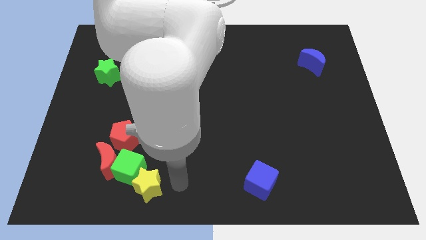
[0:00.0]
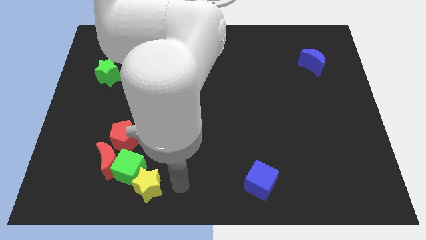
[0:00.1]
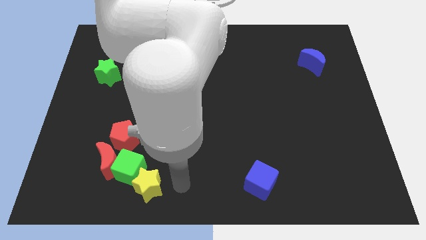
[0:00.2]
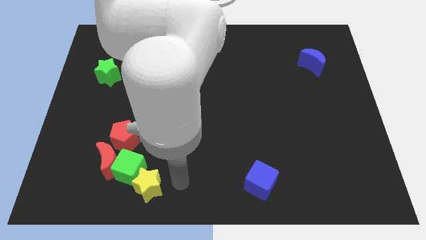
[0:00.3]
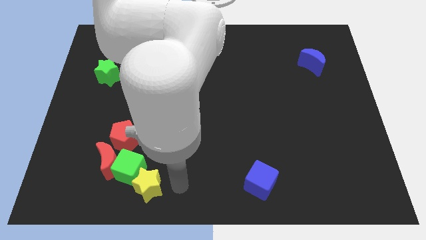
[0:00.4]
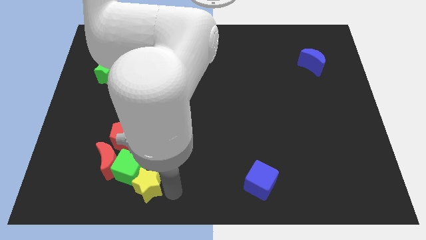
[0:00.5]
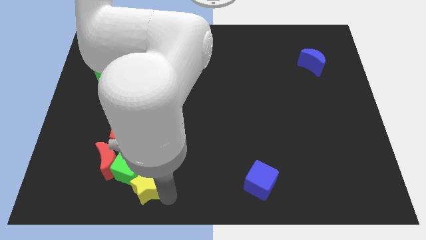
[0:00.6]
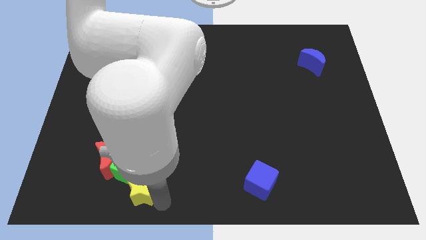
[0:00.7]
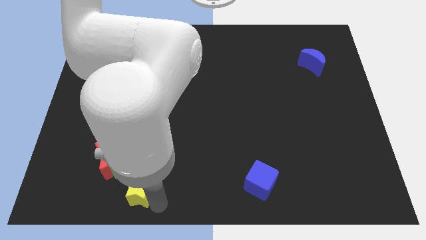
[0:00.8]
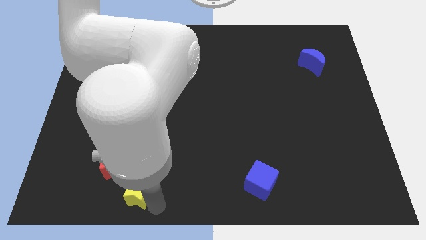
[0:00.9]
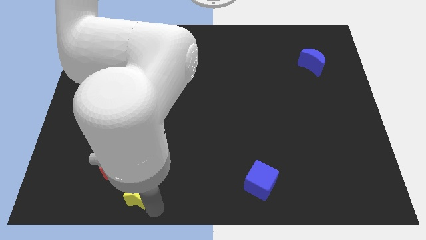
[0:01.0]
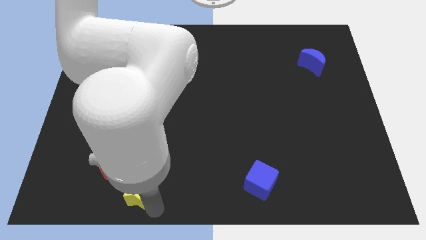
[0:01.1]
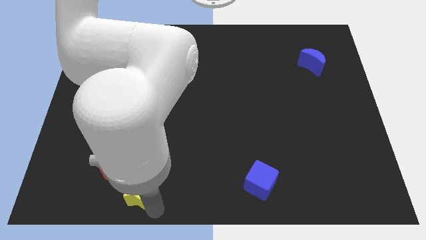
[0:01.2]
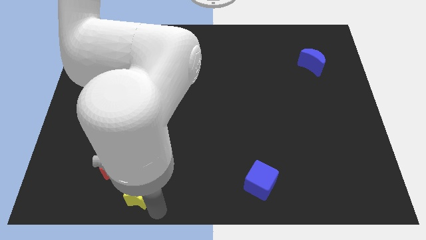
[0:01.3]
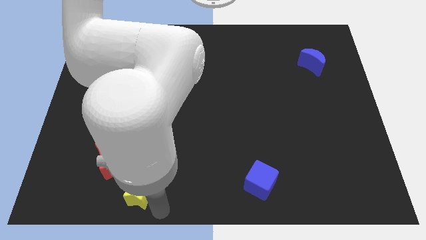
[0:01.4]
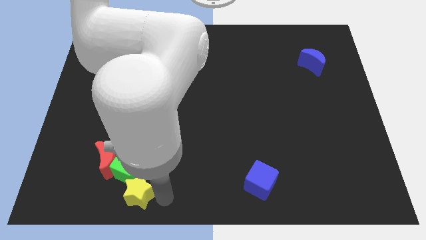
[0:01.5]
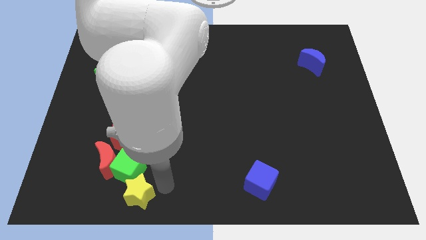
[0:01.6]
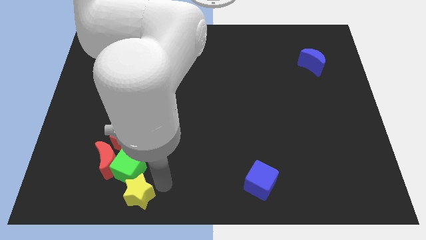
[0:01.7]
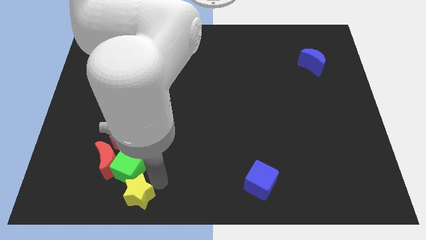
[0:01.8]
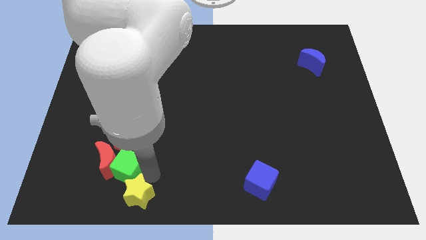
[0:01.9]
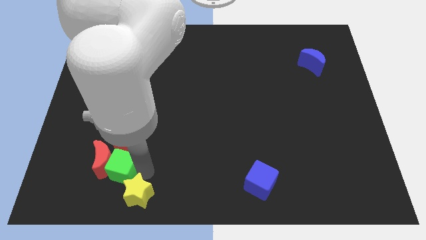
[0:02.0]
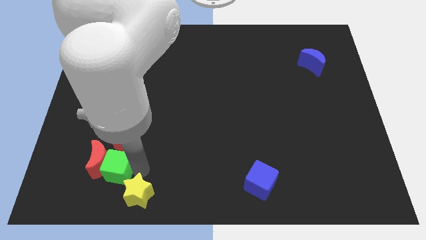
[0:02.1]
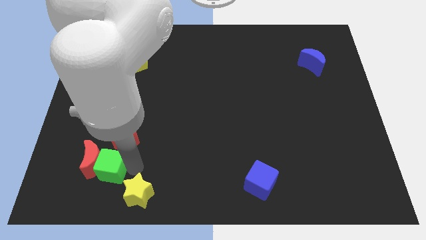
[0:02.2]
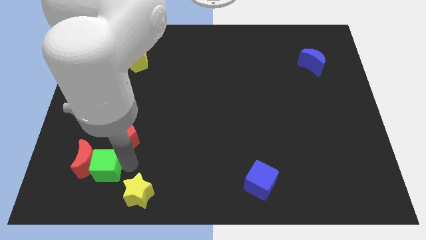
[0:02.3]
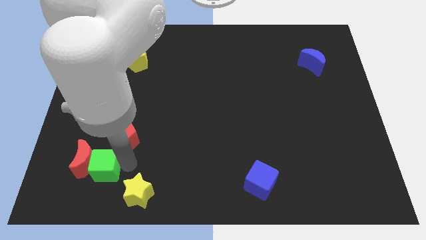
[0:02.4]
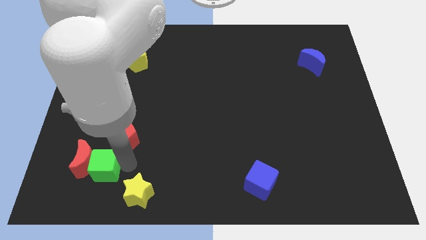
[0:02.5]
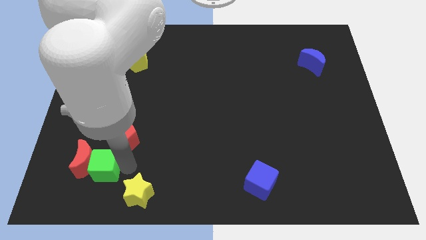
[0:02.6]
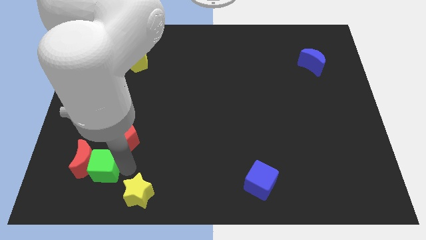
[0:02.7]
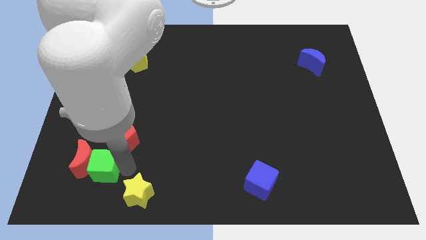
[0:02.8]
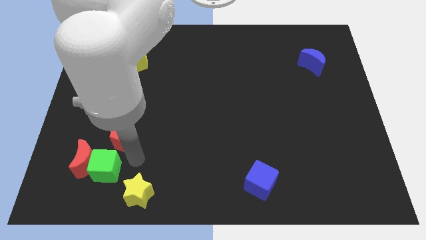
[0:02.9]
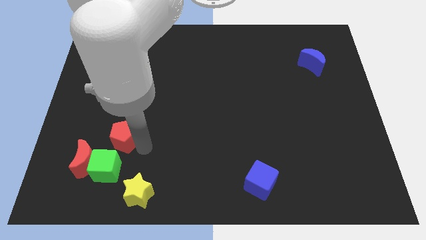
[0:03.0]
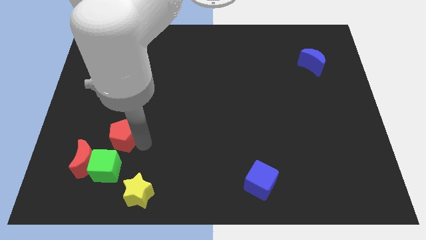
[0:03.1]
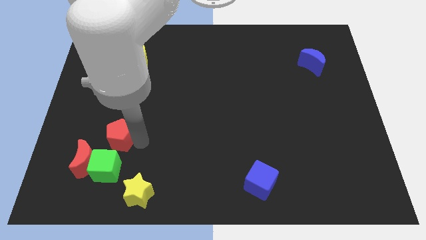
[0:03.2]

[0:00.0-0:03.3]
separate the yellow star green cube red moon and red pentagon from each others

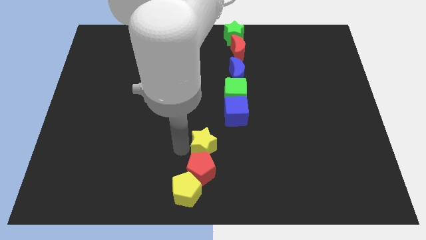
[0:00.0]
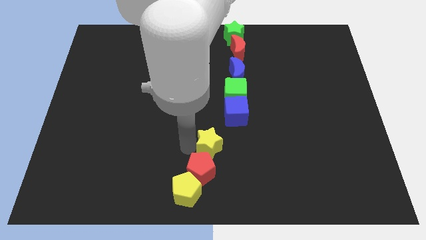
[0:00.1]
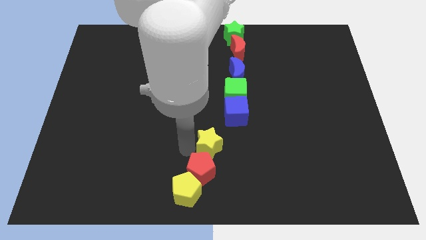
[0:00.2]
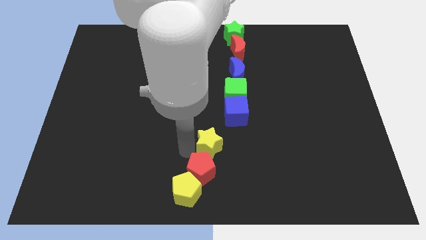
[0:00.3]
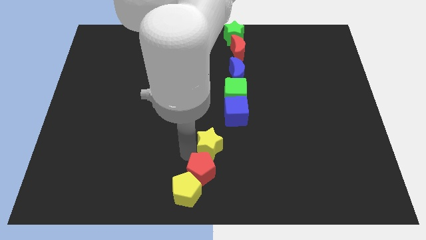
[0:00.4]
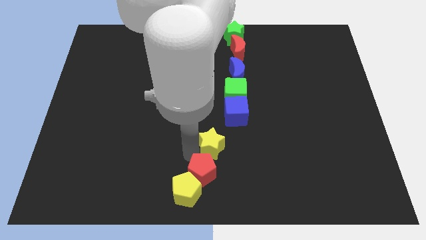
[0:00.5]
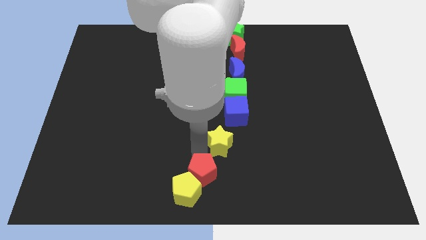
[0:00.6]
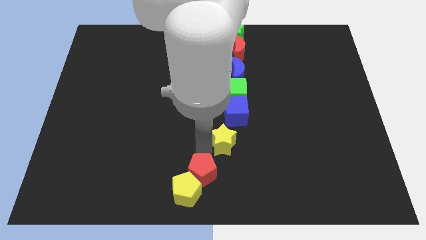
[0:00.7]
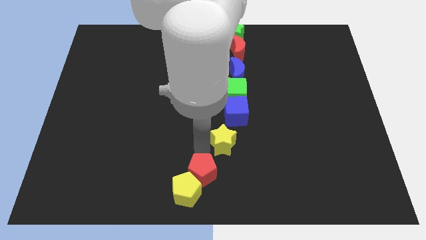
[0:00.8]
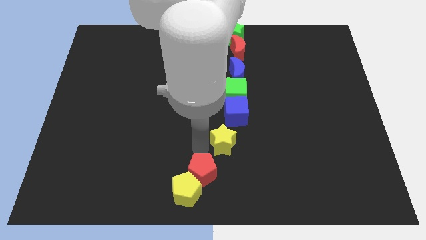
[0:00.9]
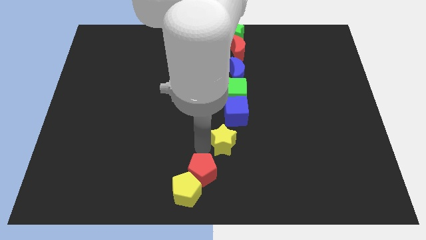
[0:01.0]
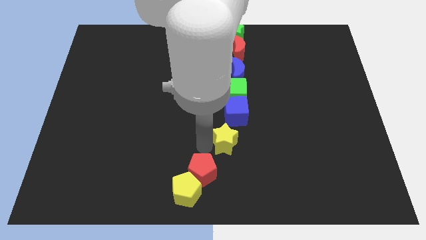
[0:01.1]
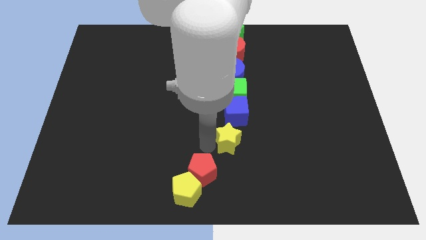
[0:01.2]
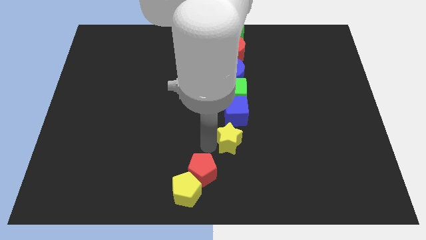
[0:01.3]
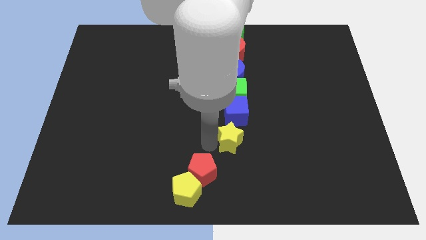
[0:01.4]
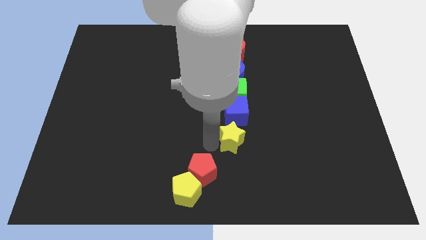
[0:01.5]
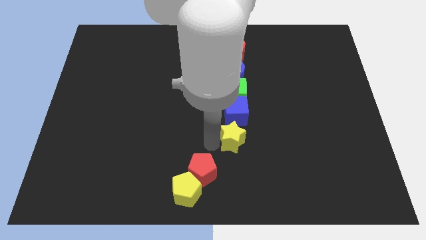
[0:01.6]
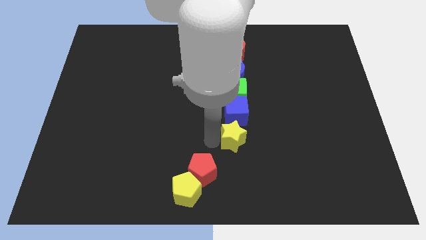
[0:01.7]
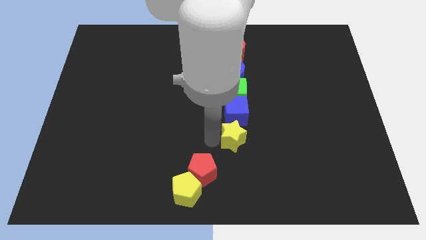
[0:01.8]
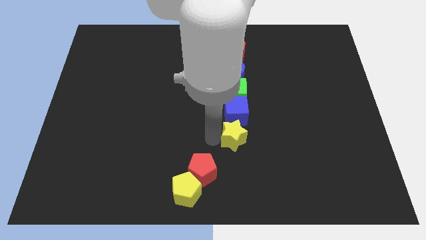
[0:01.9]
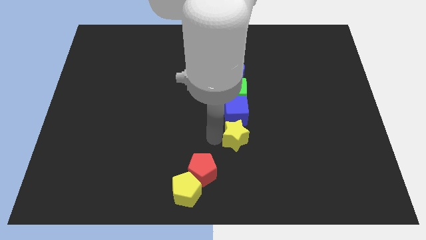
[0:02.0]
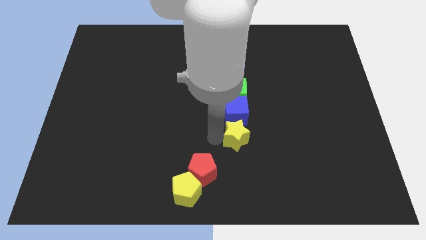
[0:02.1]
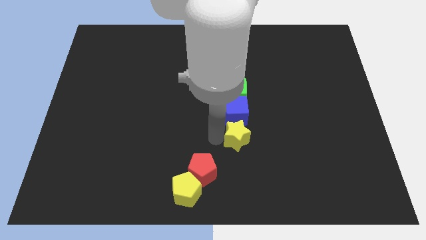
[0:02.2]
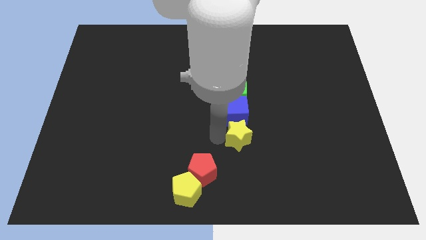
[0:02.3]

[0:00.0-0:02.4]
move the yellow star below blue cube

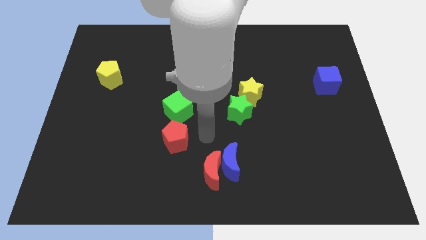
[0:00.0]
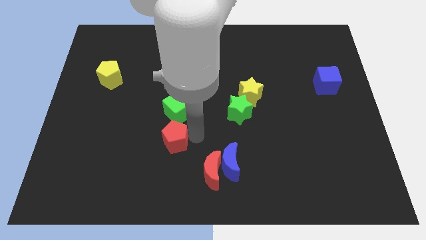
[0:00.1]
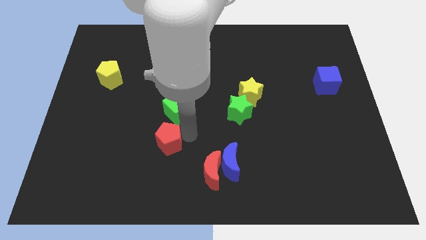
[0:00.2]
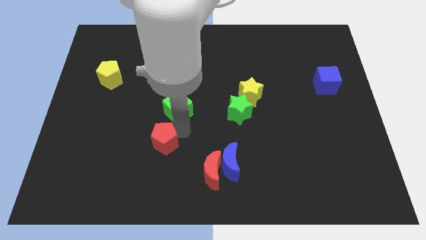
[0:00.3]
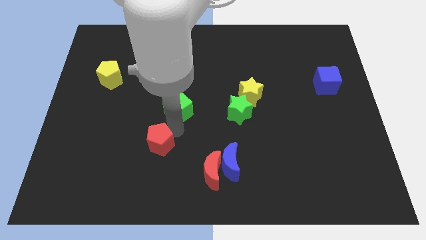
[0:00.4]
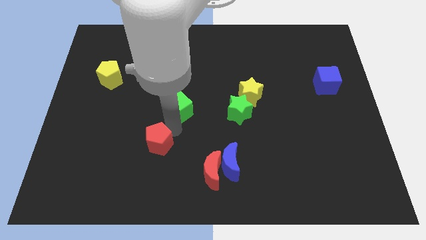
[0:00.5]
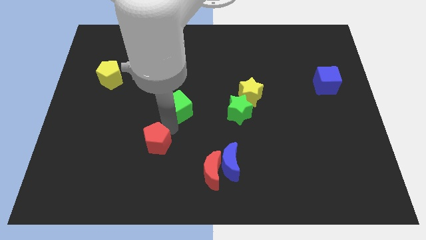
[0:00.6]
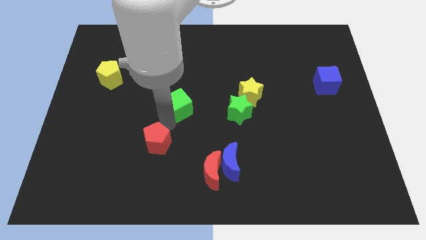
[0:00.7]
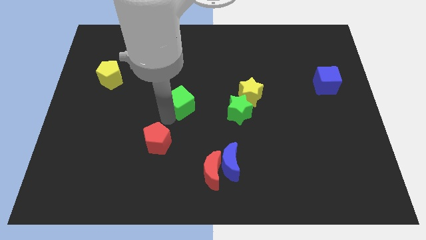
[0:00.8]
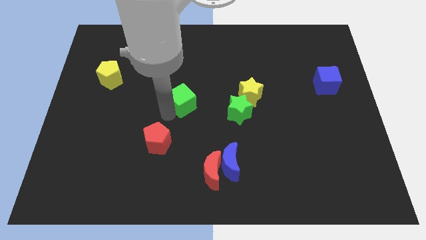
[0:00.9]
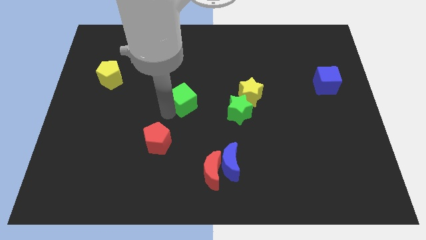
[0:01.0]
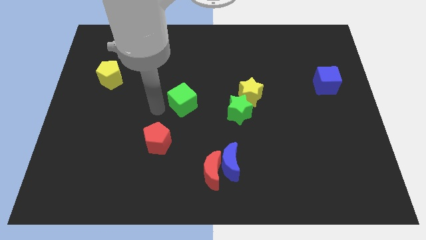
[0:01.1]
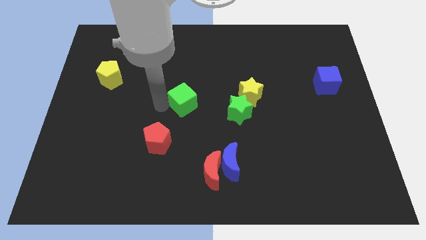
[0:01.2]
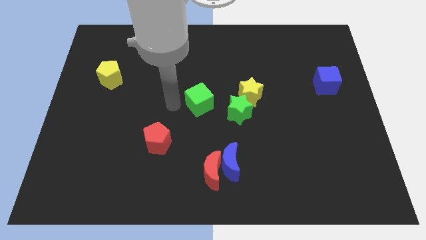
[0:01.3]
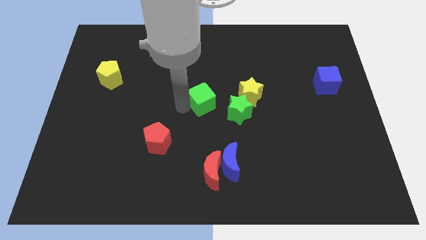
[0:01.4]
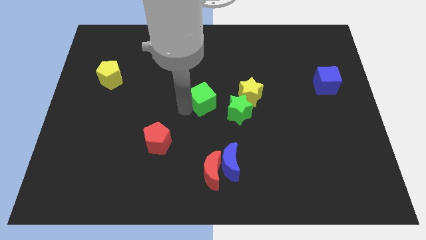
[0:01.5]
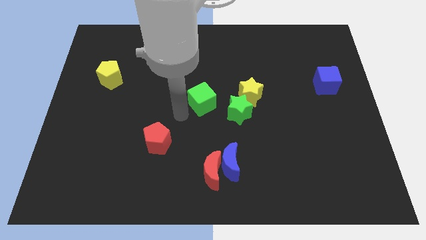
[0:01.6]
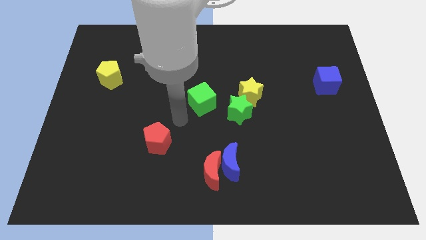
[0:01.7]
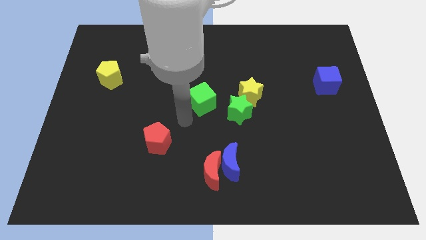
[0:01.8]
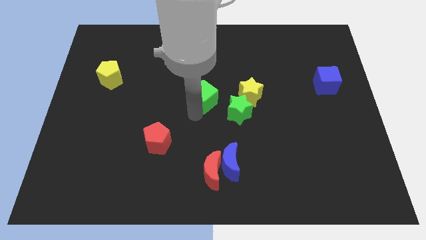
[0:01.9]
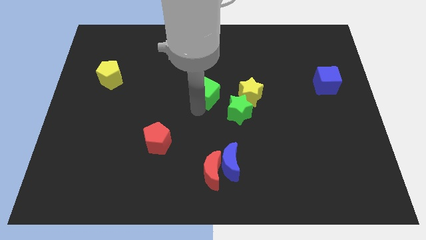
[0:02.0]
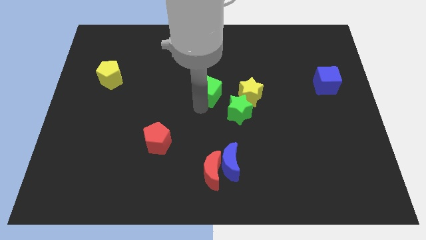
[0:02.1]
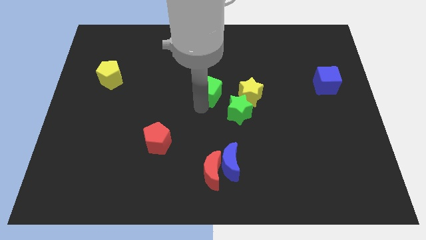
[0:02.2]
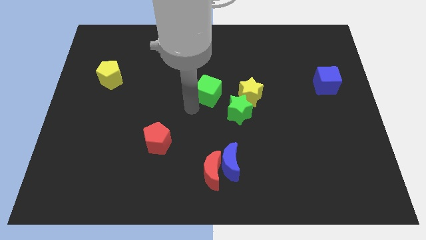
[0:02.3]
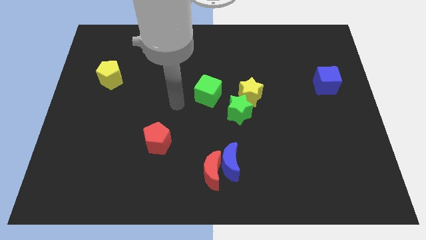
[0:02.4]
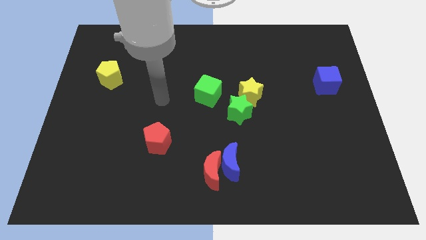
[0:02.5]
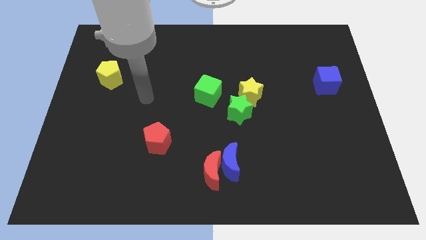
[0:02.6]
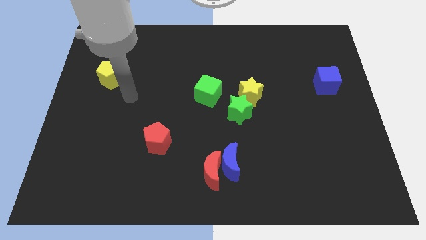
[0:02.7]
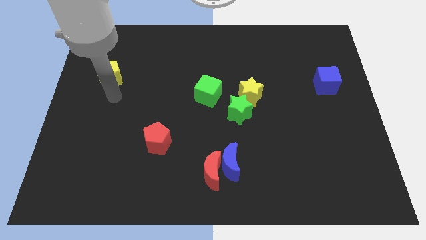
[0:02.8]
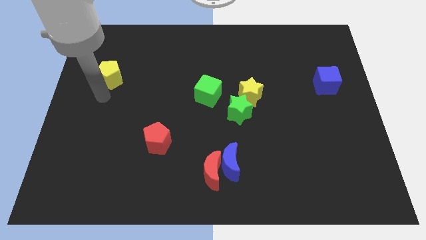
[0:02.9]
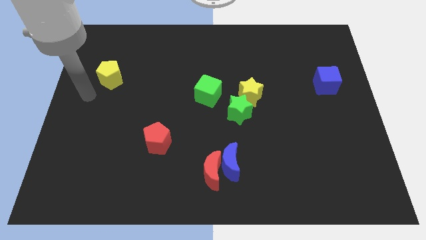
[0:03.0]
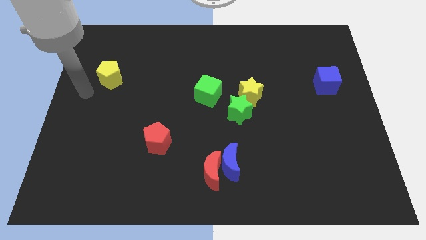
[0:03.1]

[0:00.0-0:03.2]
move green cube to the top left of green star

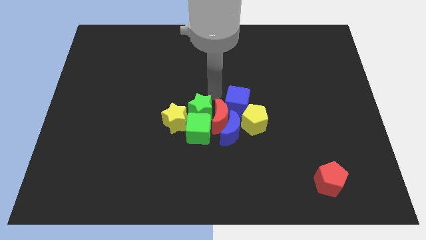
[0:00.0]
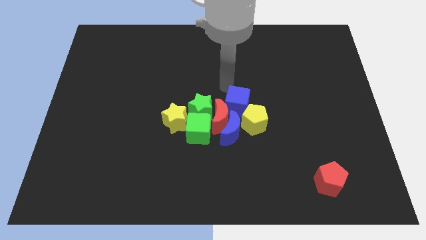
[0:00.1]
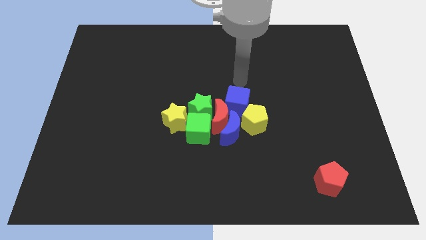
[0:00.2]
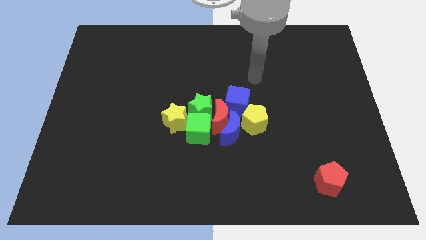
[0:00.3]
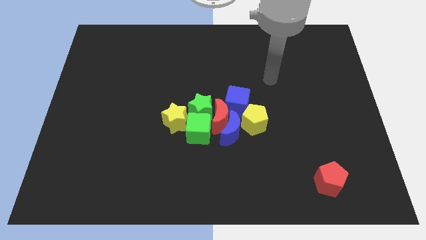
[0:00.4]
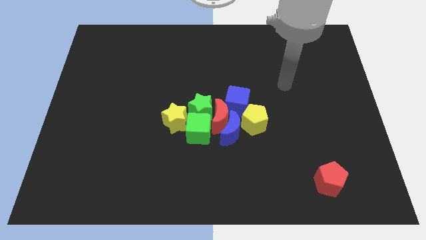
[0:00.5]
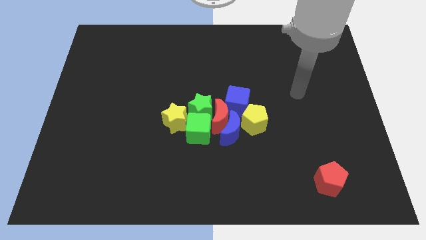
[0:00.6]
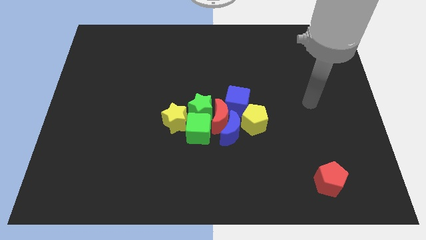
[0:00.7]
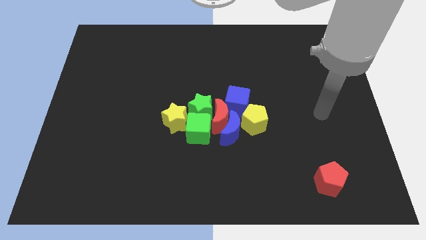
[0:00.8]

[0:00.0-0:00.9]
move your arm away from green star
